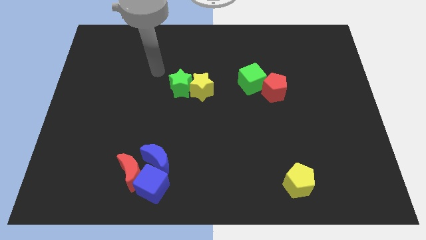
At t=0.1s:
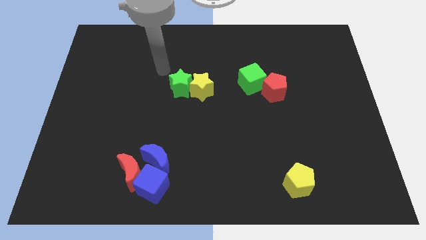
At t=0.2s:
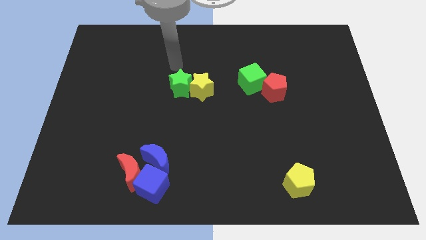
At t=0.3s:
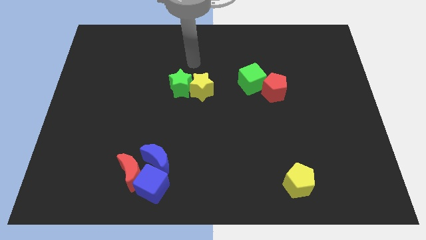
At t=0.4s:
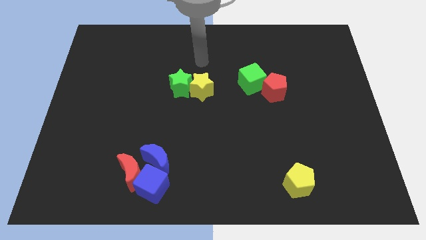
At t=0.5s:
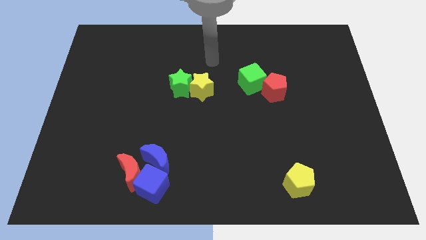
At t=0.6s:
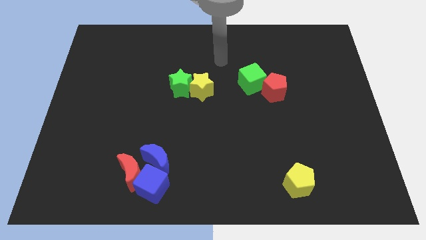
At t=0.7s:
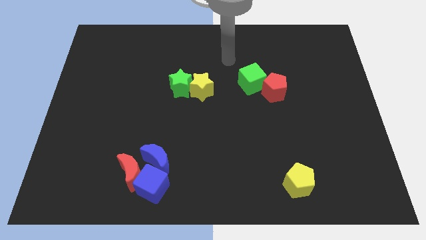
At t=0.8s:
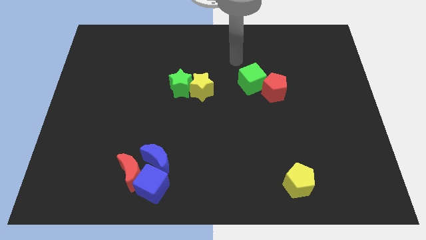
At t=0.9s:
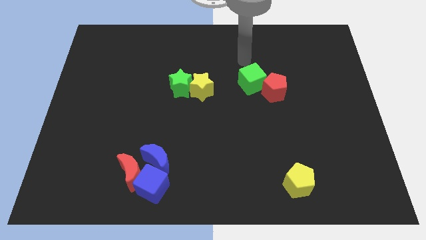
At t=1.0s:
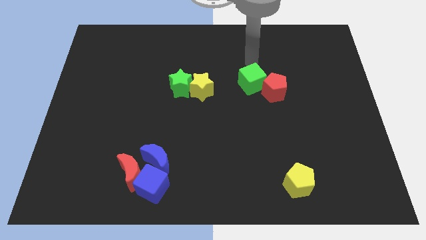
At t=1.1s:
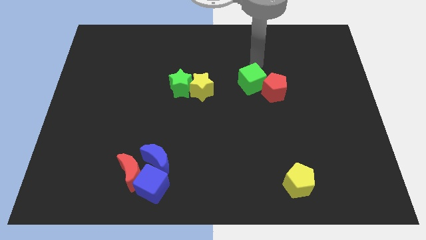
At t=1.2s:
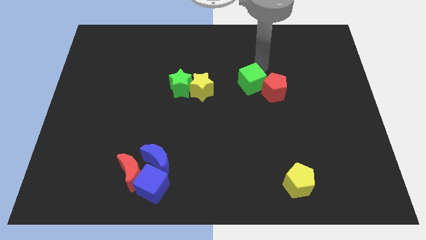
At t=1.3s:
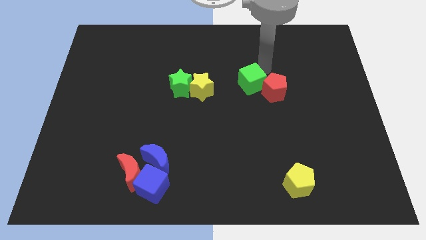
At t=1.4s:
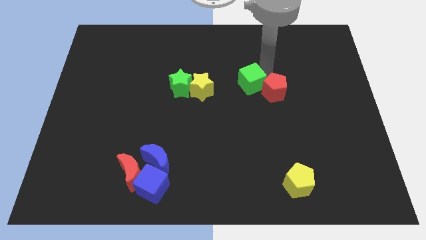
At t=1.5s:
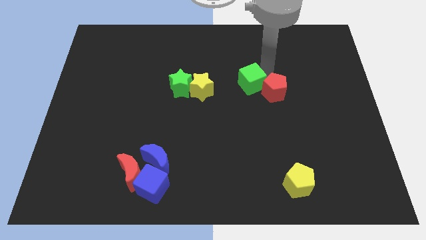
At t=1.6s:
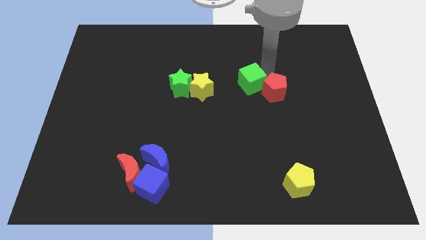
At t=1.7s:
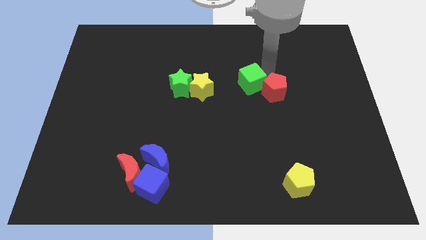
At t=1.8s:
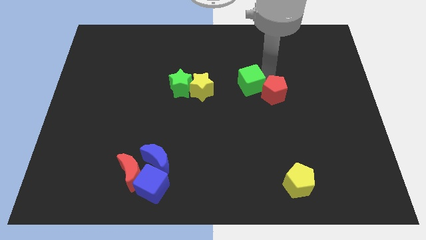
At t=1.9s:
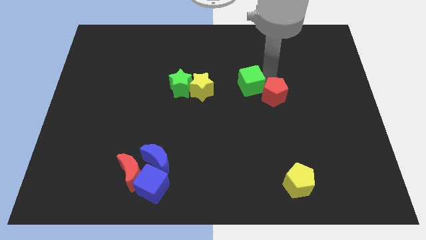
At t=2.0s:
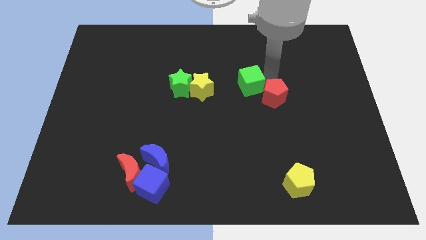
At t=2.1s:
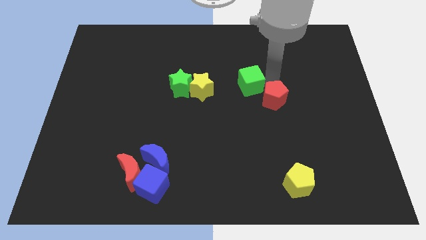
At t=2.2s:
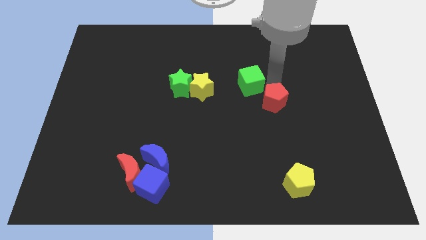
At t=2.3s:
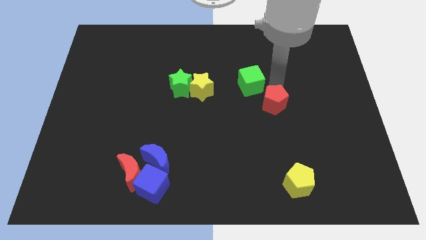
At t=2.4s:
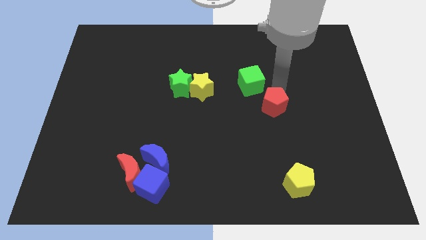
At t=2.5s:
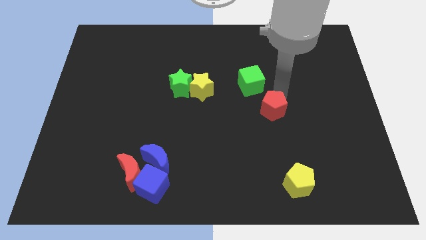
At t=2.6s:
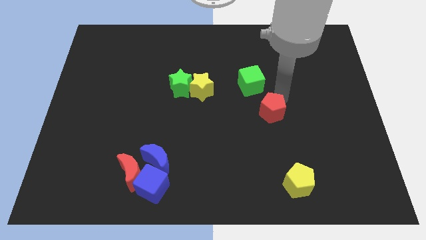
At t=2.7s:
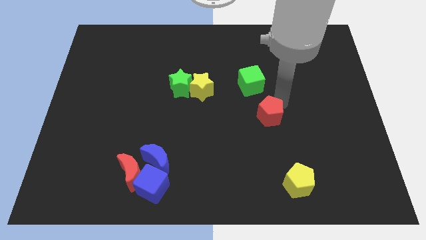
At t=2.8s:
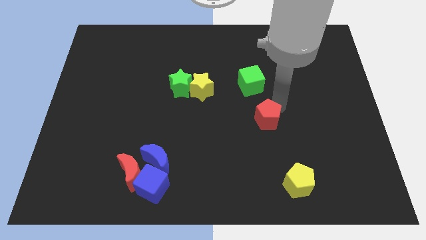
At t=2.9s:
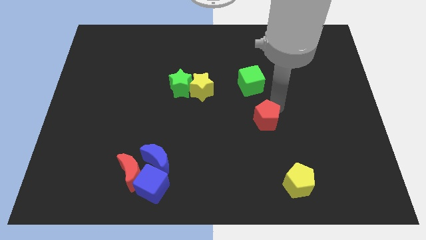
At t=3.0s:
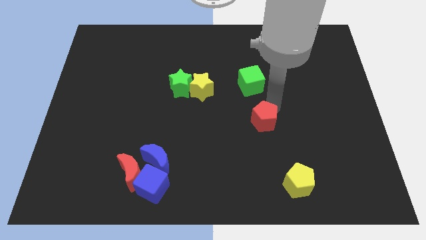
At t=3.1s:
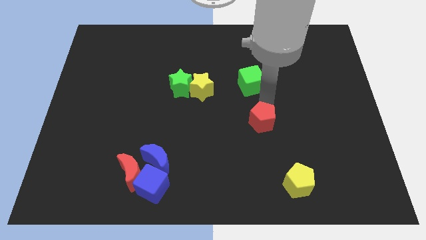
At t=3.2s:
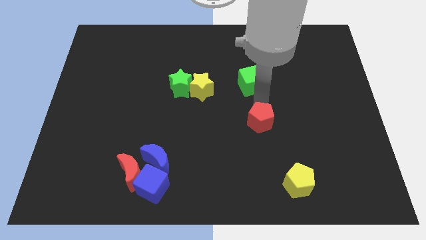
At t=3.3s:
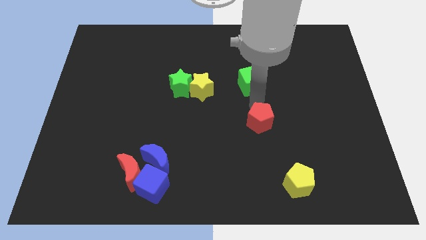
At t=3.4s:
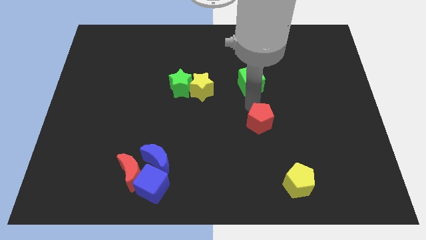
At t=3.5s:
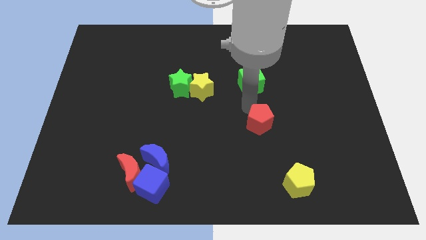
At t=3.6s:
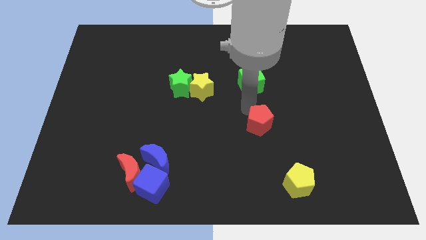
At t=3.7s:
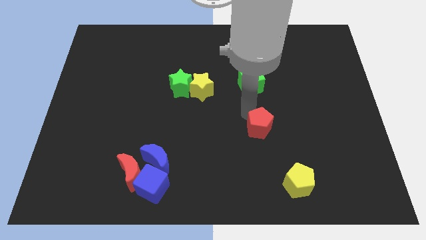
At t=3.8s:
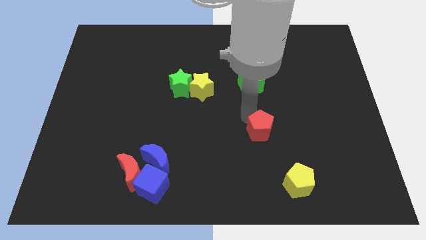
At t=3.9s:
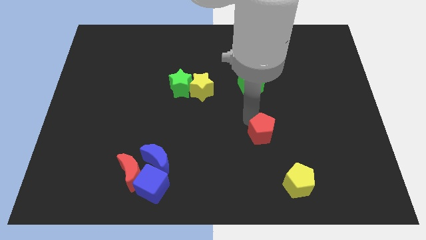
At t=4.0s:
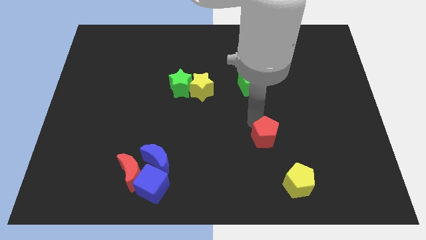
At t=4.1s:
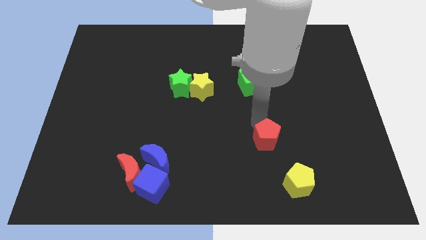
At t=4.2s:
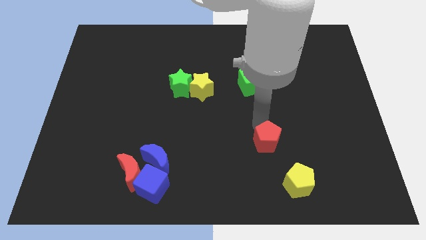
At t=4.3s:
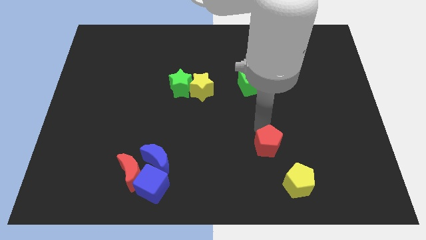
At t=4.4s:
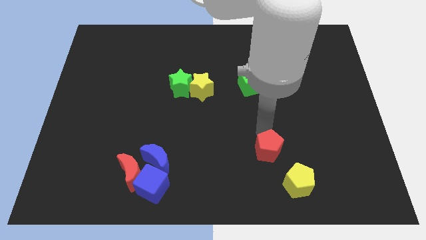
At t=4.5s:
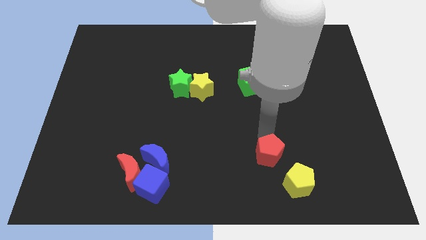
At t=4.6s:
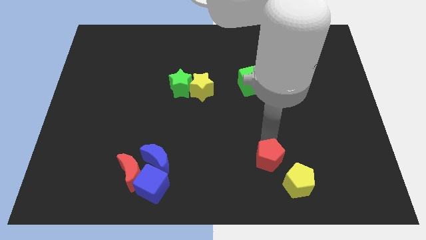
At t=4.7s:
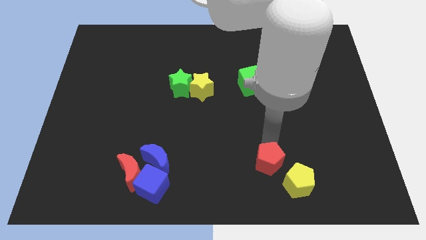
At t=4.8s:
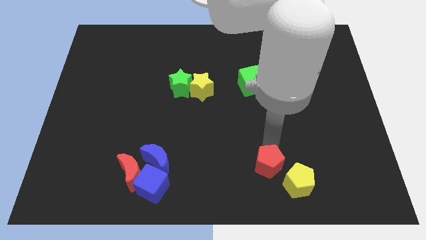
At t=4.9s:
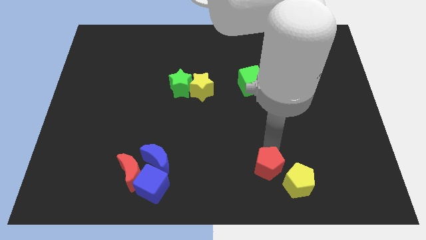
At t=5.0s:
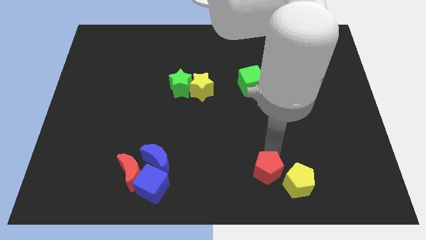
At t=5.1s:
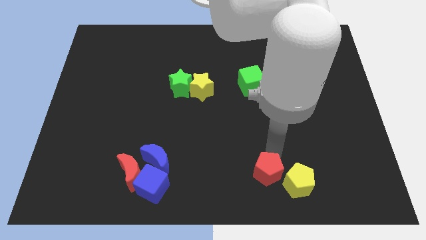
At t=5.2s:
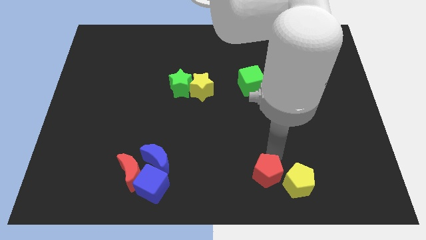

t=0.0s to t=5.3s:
move the red pentagon next to the yellow pentagon

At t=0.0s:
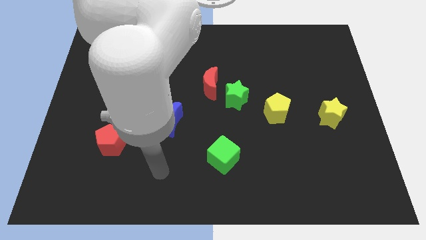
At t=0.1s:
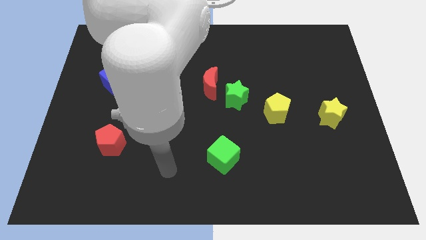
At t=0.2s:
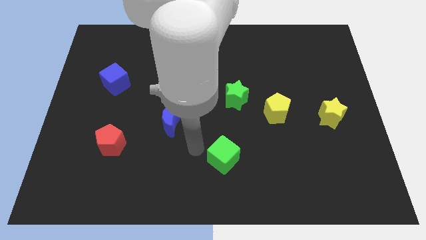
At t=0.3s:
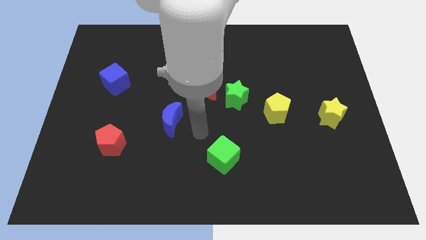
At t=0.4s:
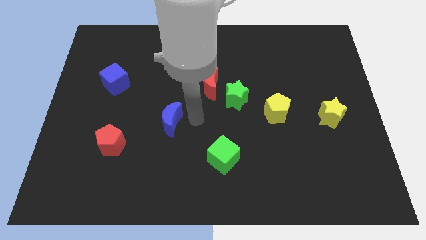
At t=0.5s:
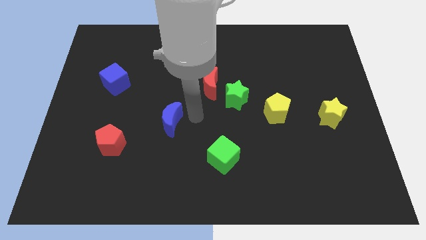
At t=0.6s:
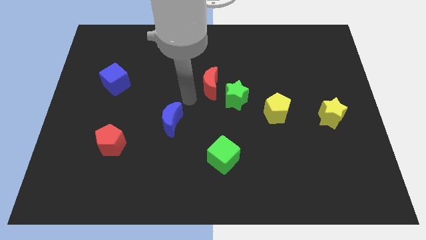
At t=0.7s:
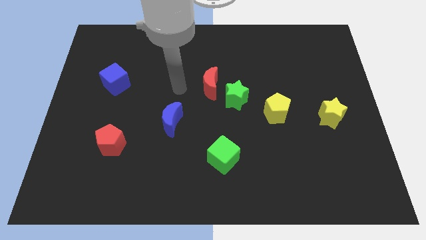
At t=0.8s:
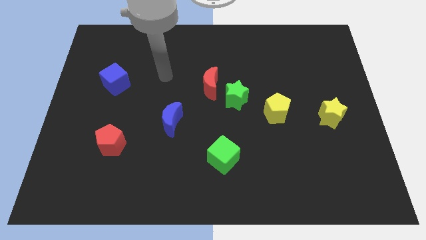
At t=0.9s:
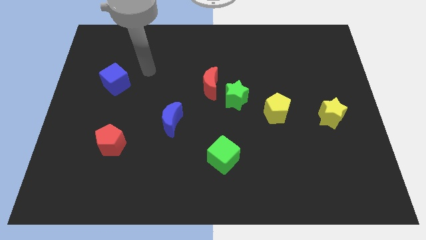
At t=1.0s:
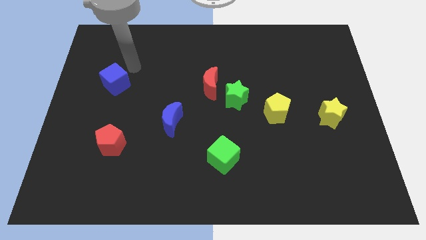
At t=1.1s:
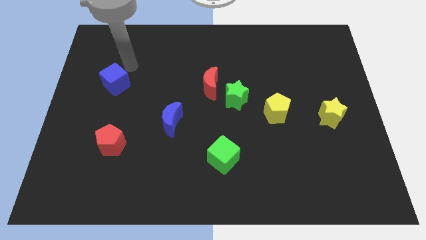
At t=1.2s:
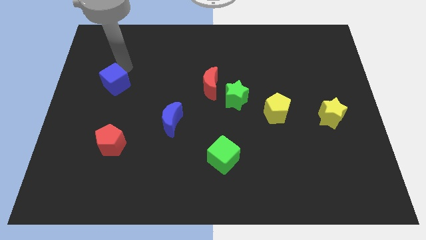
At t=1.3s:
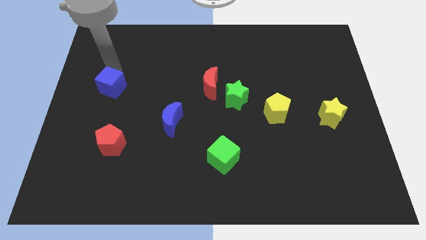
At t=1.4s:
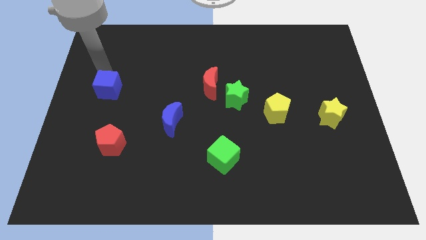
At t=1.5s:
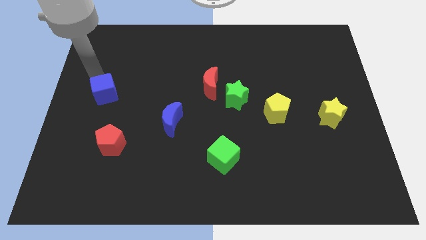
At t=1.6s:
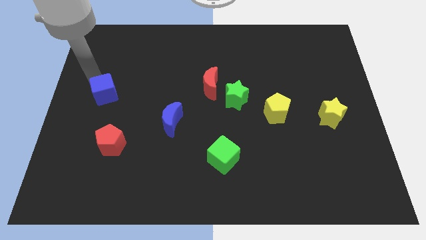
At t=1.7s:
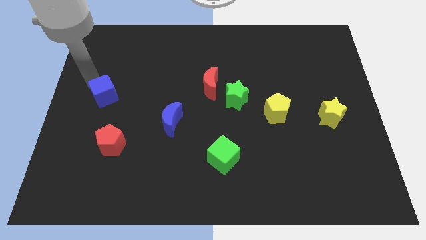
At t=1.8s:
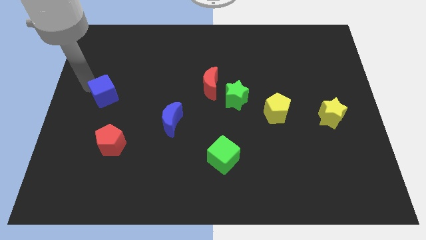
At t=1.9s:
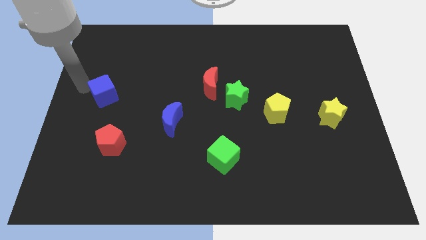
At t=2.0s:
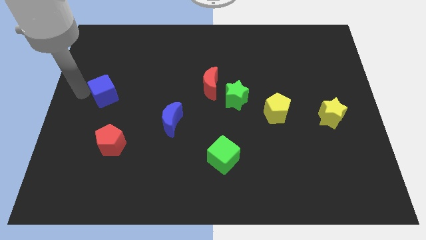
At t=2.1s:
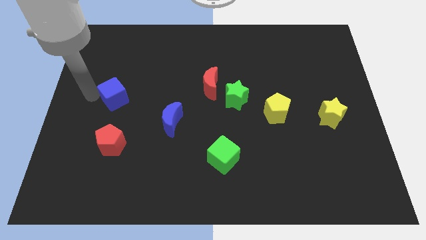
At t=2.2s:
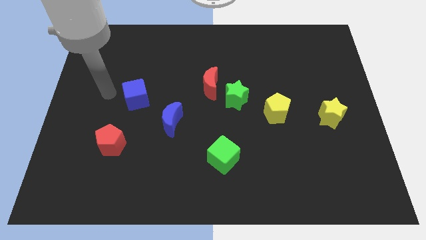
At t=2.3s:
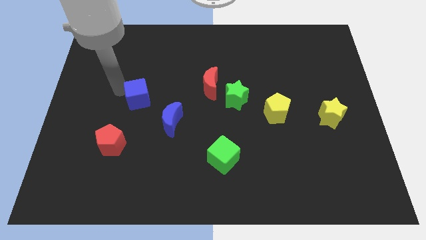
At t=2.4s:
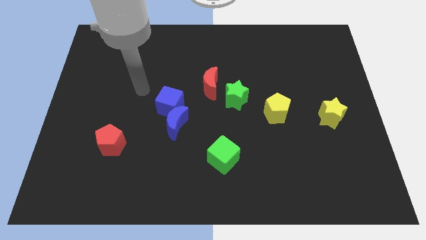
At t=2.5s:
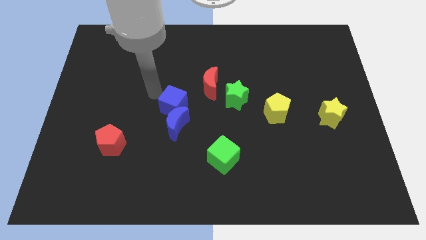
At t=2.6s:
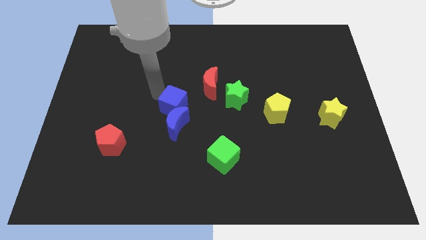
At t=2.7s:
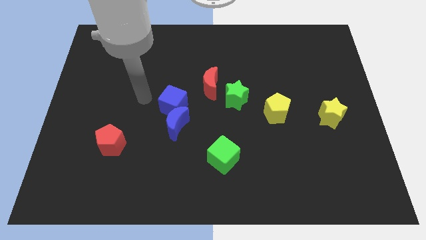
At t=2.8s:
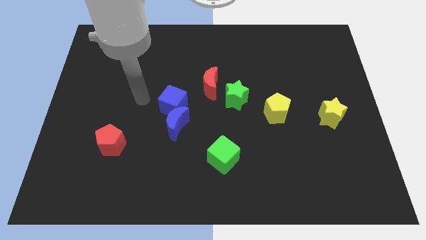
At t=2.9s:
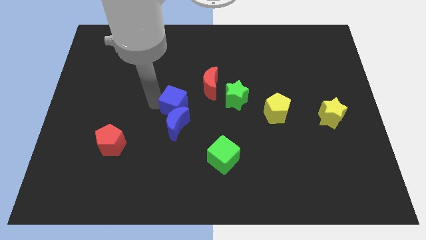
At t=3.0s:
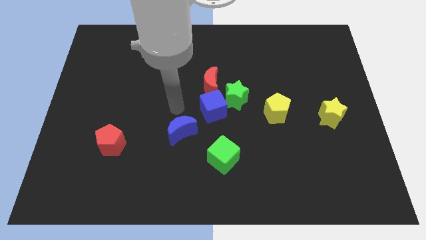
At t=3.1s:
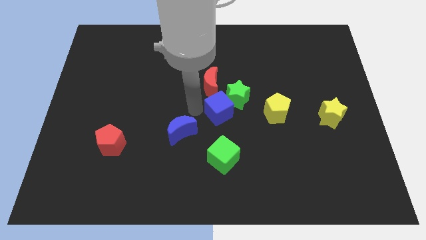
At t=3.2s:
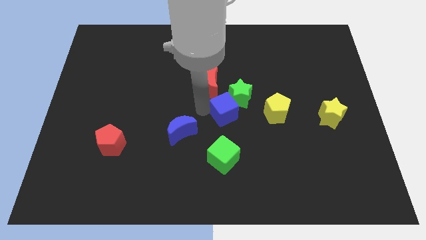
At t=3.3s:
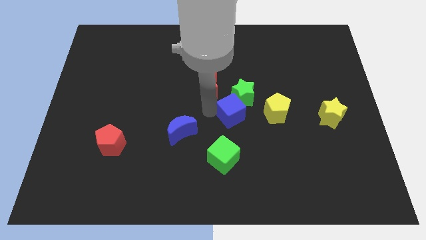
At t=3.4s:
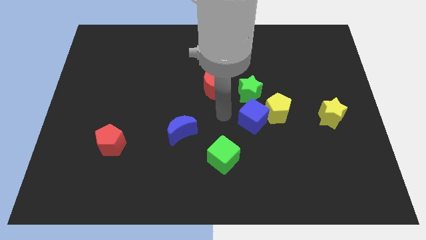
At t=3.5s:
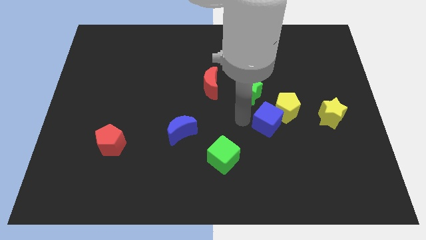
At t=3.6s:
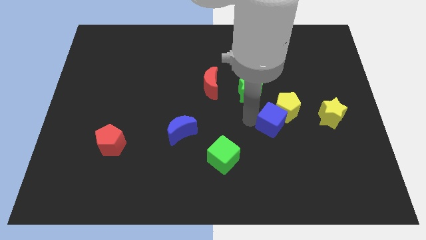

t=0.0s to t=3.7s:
slide the blue cube next to the yellow pentagon

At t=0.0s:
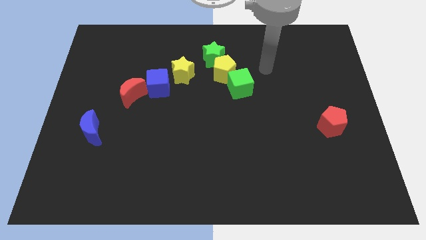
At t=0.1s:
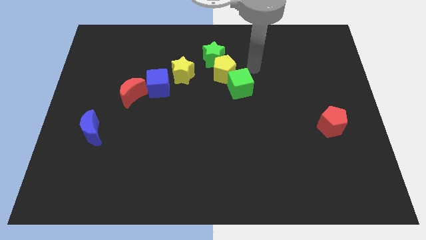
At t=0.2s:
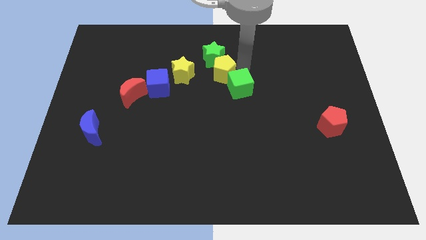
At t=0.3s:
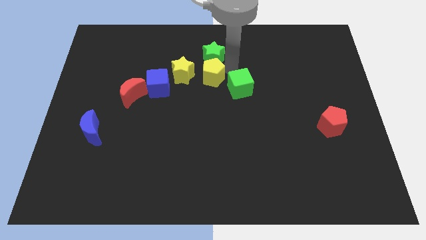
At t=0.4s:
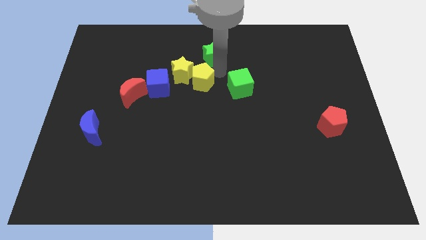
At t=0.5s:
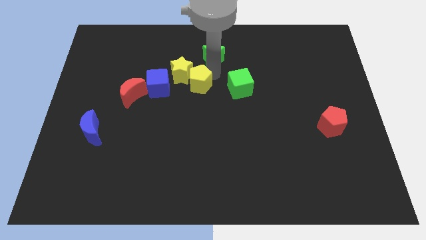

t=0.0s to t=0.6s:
move the yellow pentagon towards the yellow star
